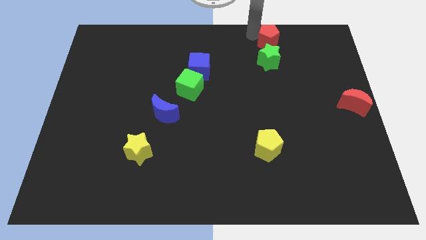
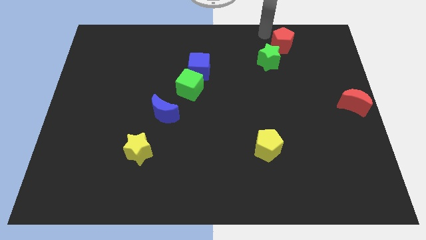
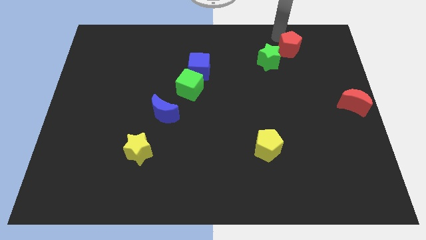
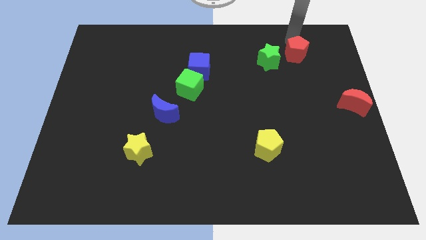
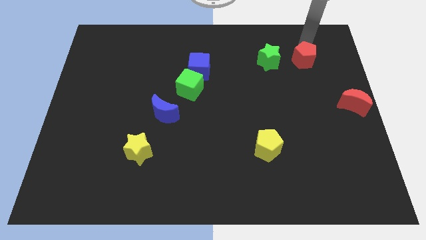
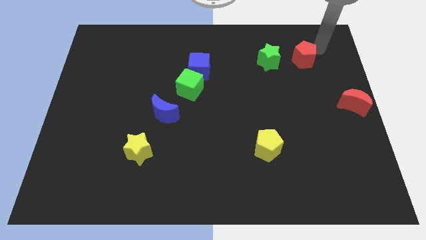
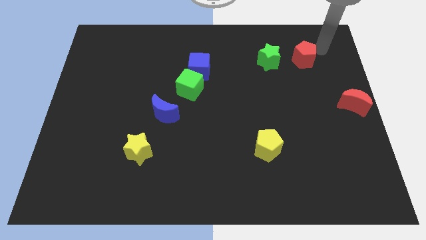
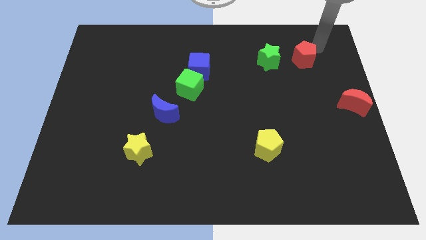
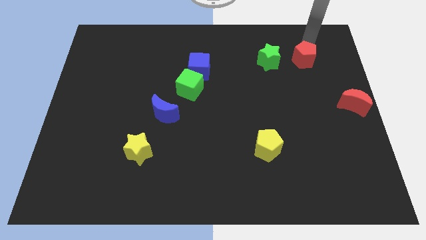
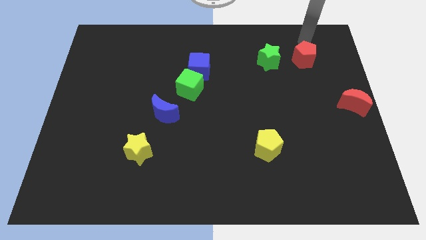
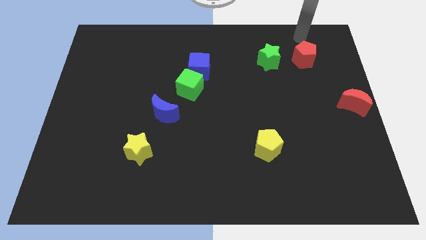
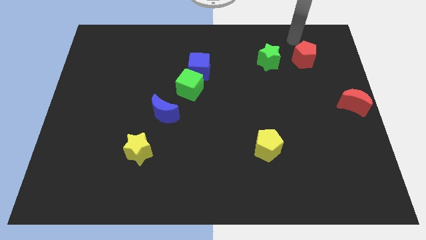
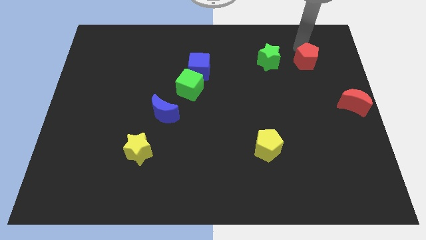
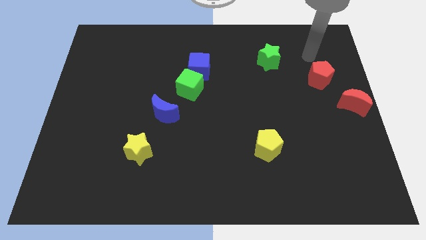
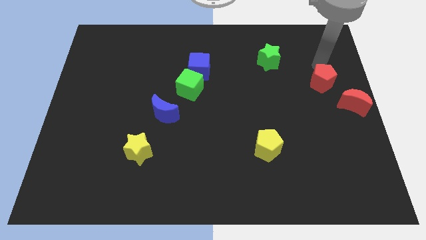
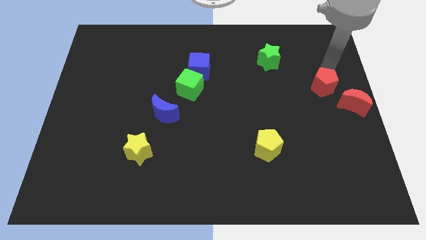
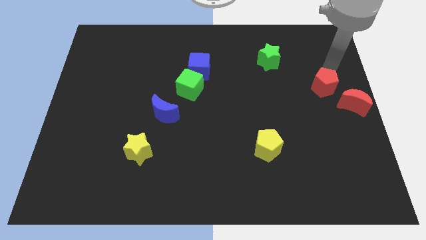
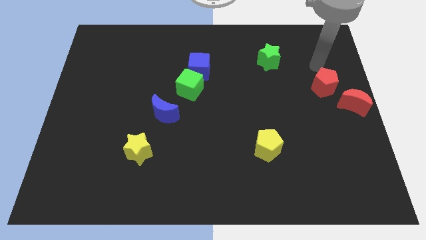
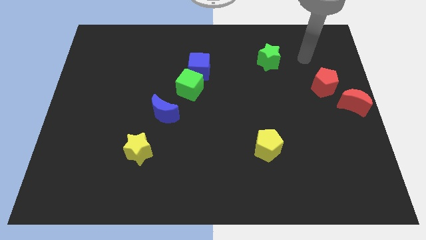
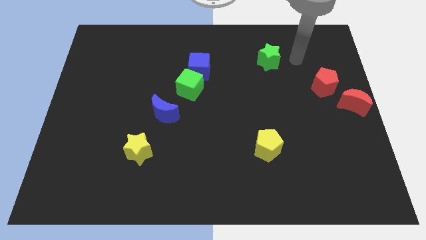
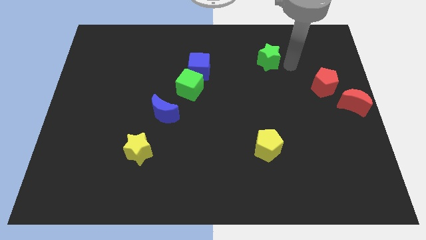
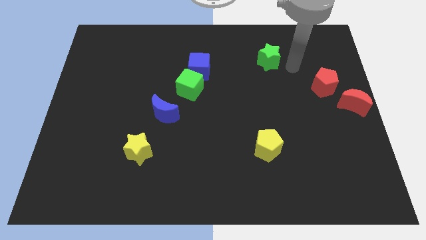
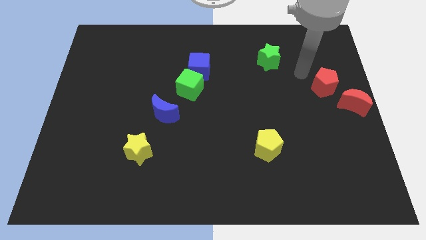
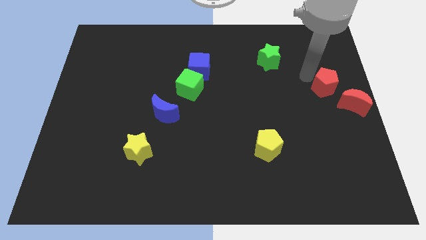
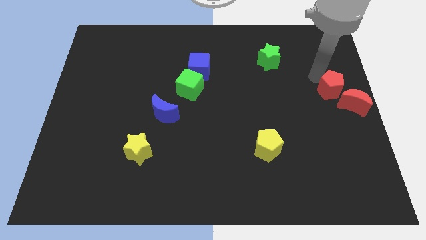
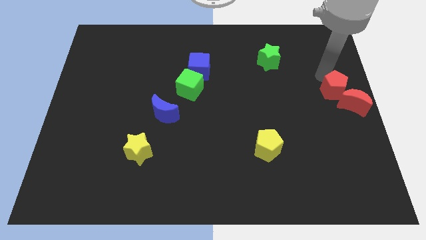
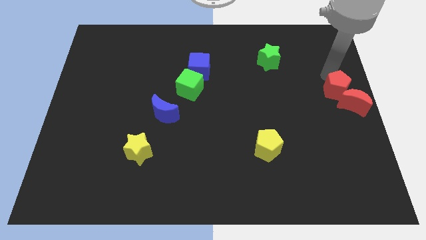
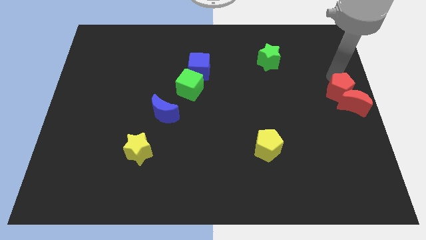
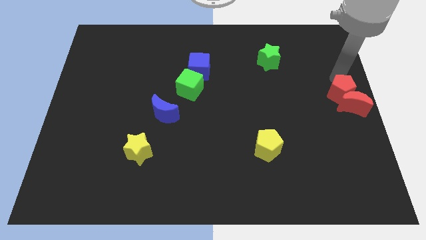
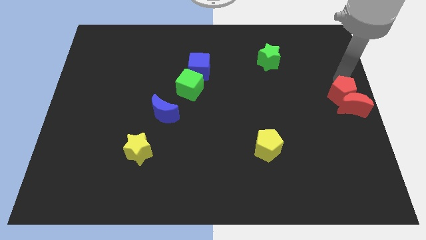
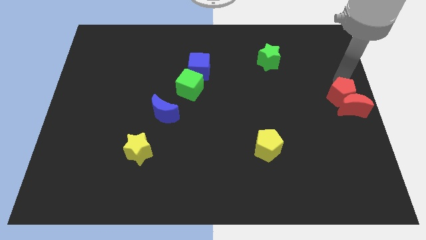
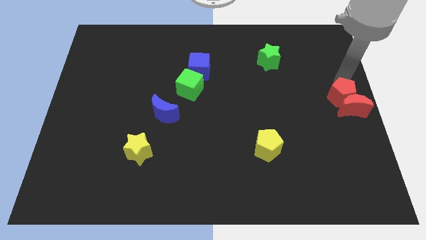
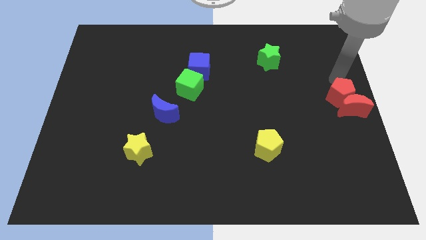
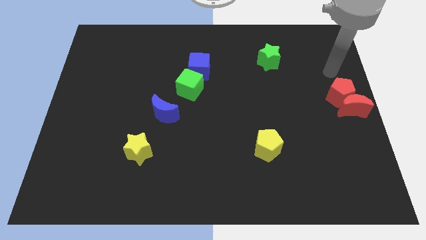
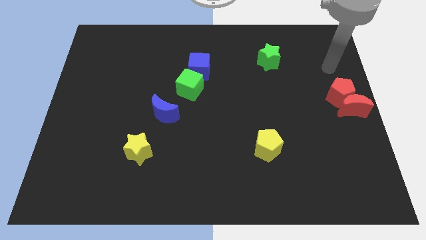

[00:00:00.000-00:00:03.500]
push red pentagon in to red crescent

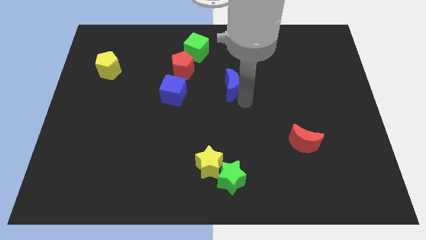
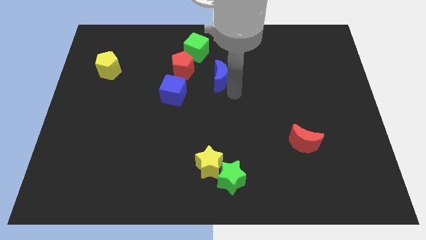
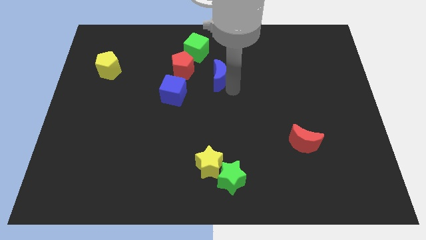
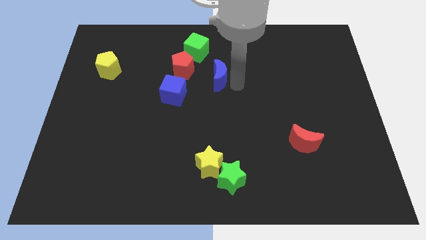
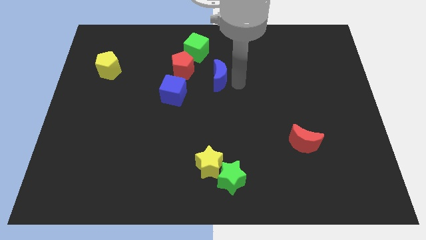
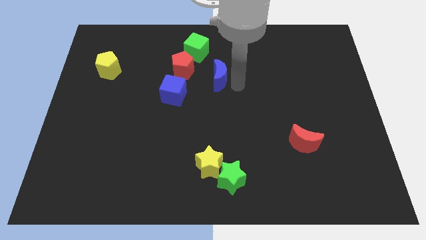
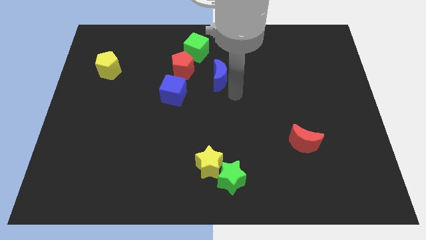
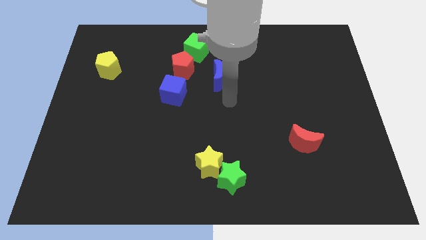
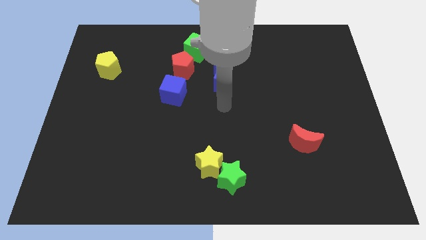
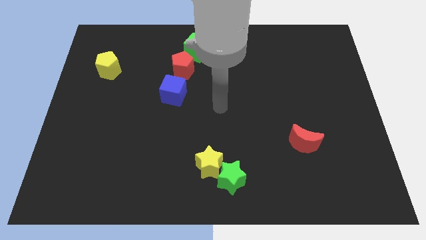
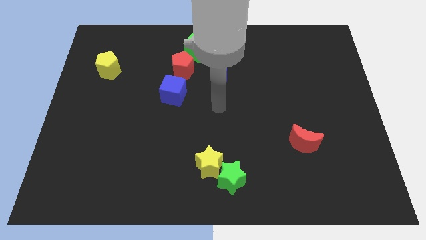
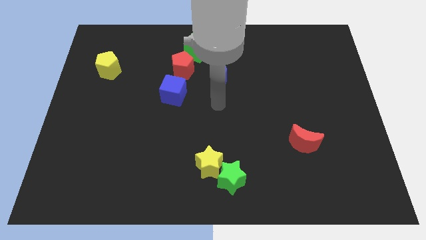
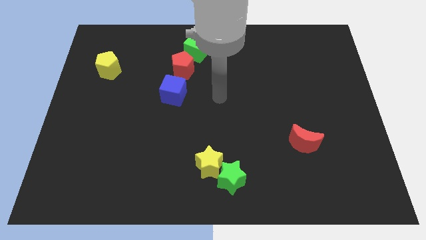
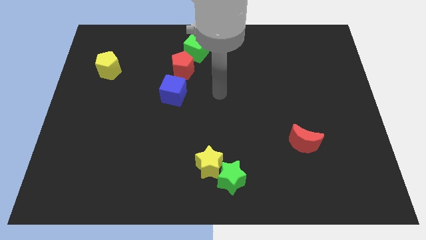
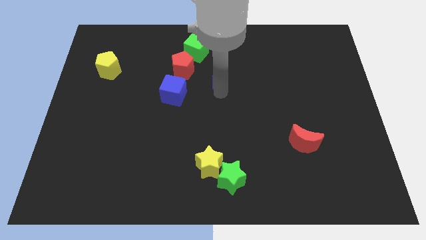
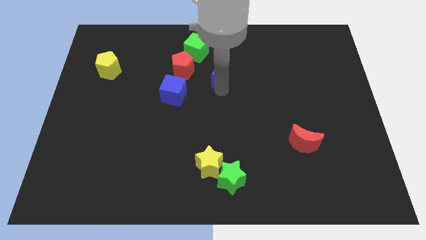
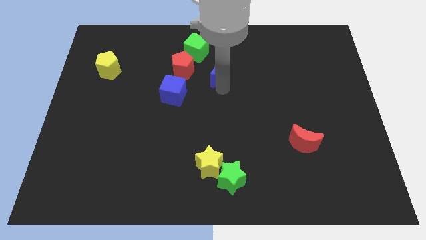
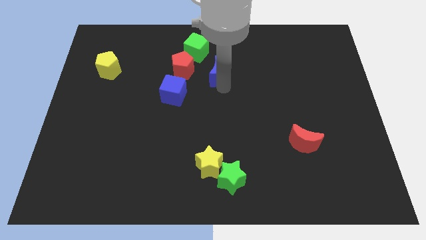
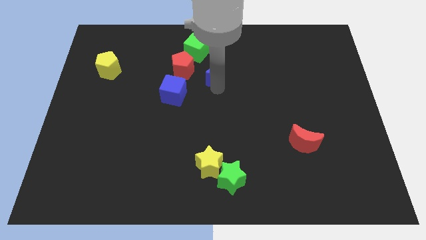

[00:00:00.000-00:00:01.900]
push the blue crescent towards the red pentagon

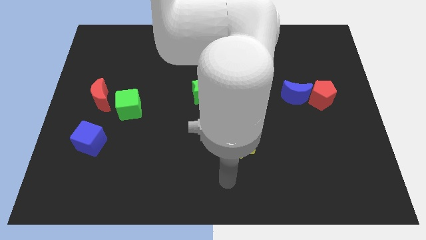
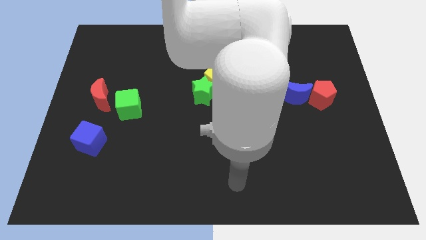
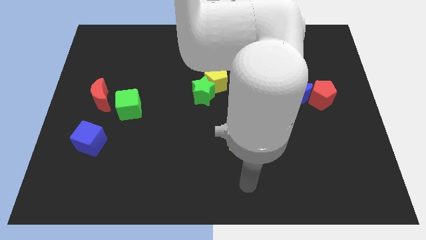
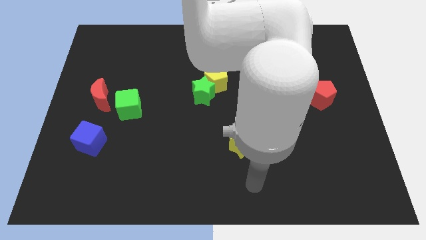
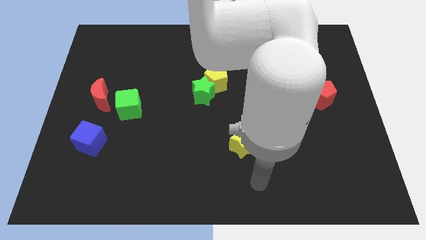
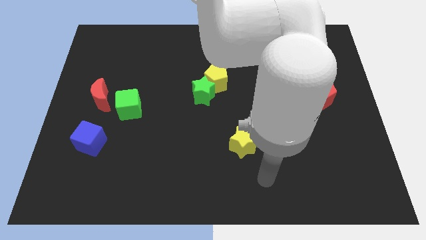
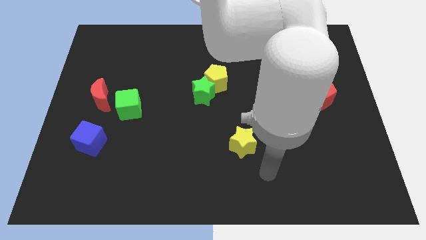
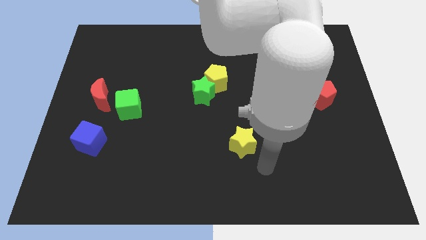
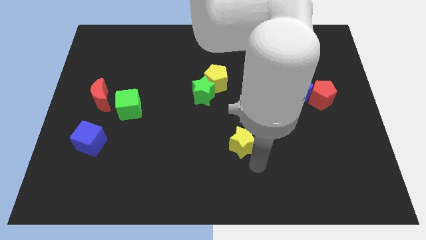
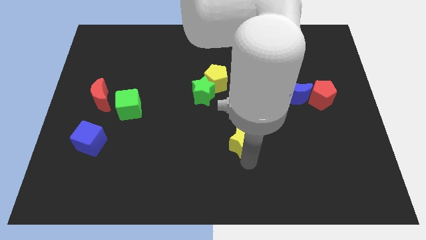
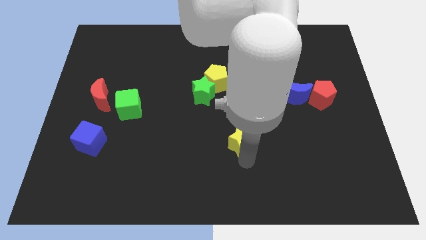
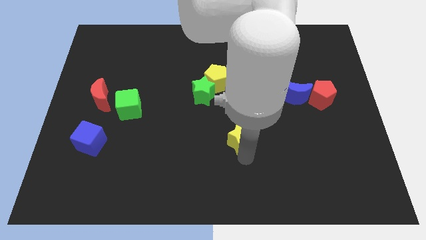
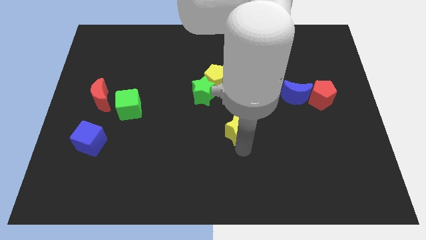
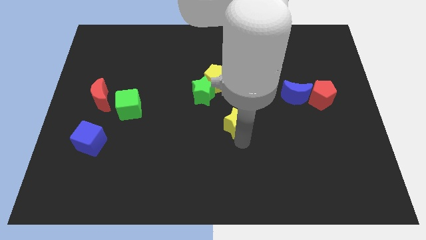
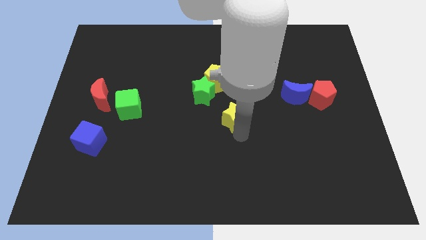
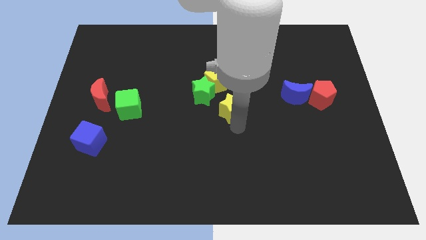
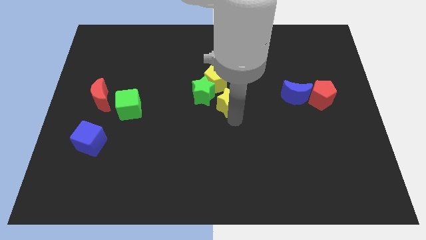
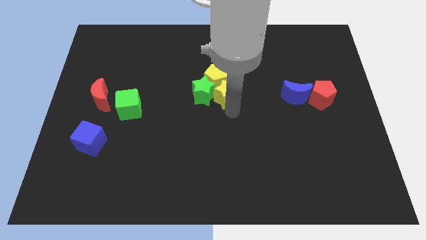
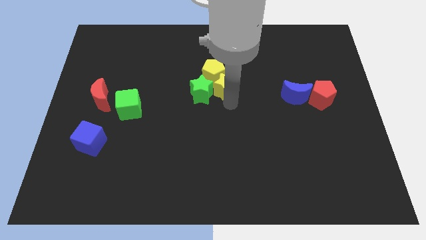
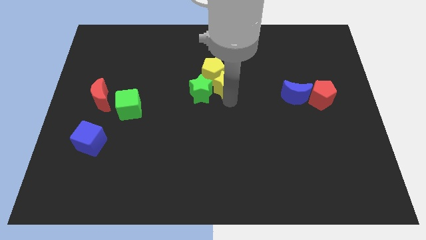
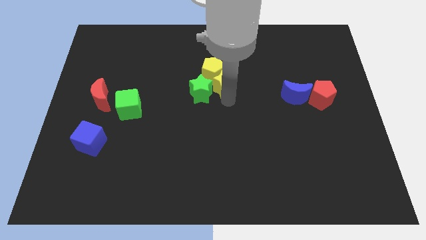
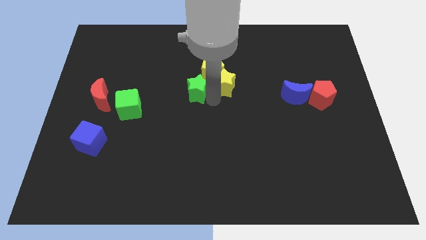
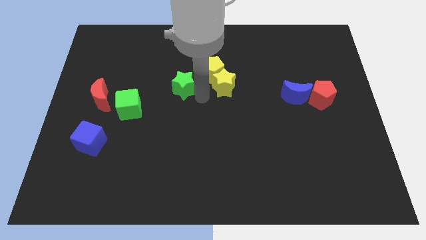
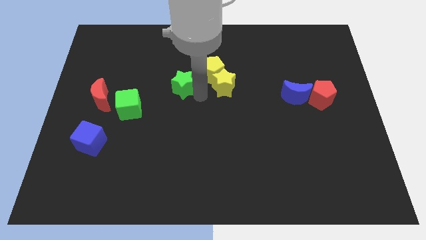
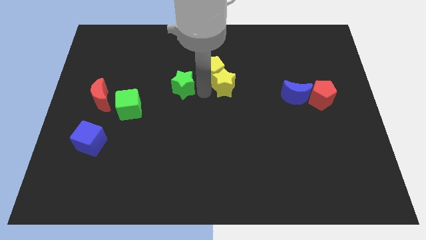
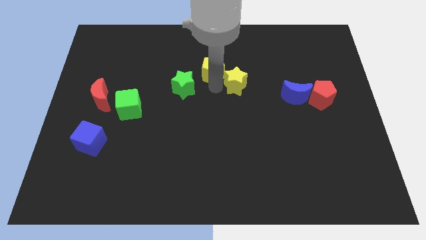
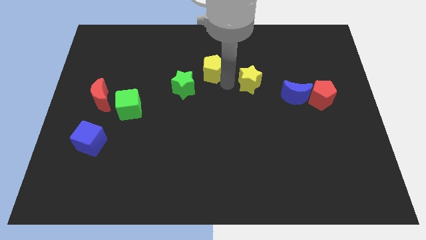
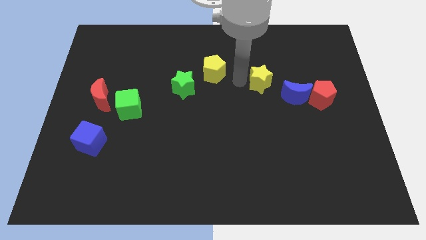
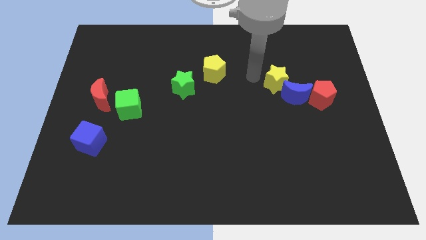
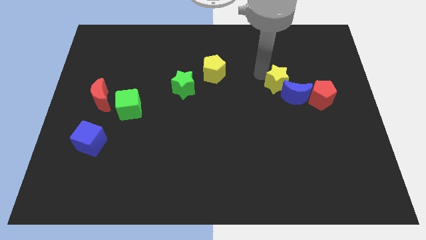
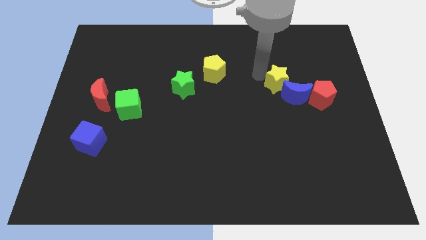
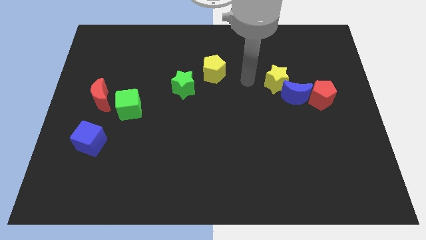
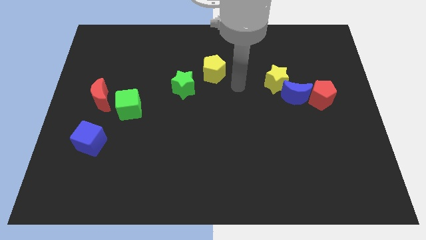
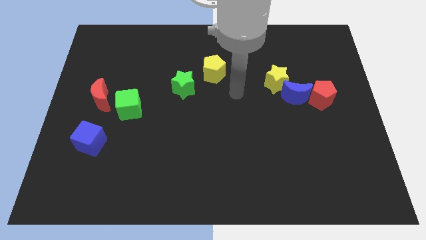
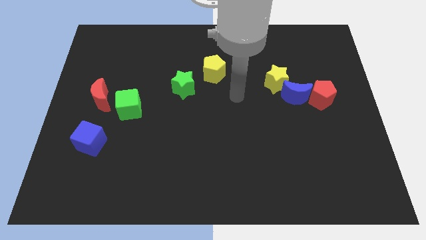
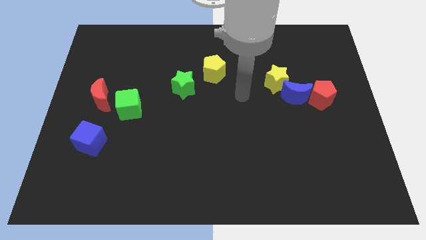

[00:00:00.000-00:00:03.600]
move the yellow star close to the blue crescent
